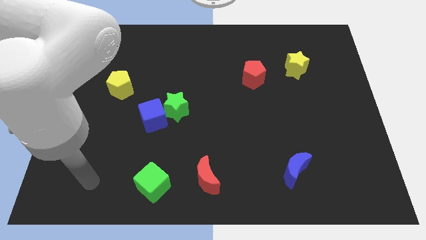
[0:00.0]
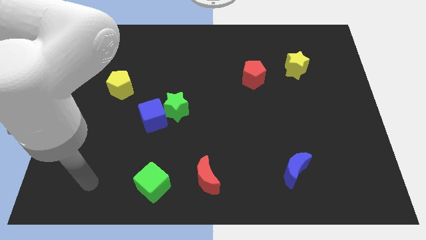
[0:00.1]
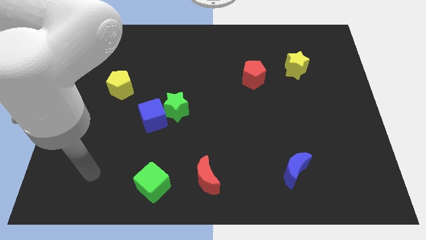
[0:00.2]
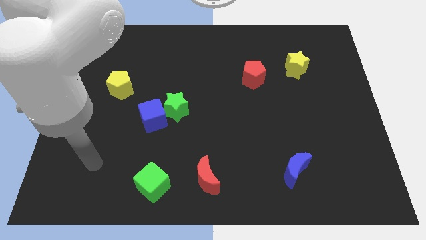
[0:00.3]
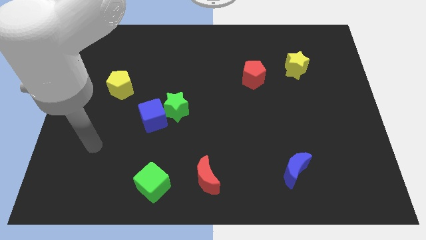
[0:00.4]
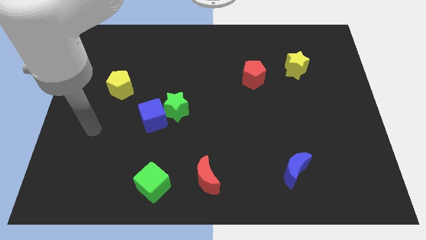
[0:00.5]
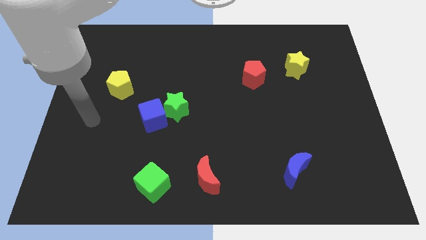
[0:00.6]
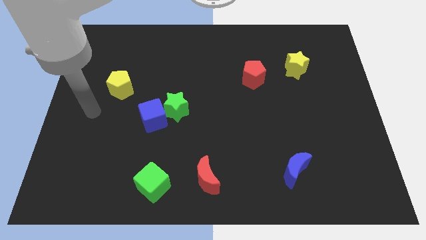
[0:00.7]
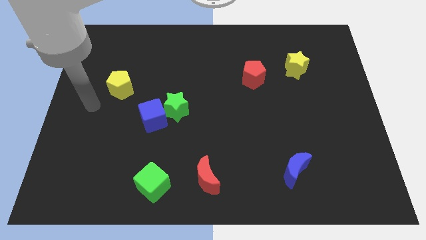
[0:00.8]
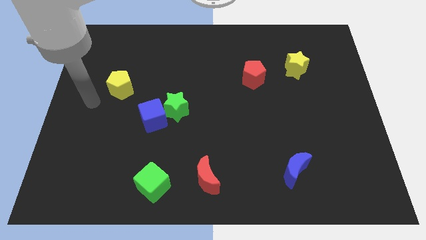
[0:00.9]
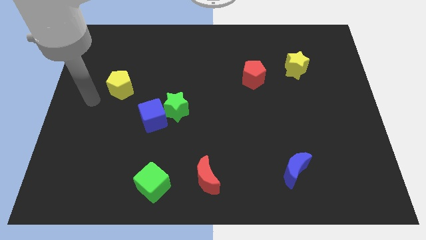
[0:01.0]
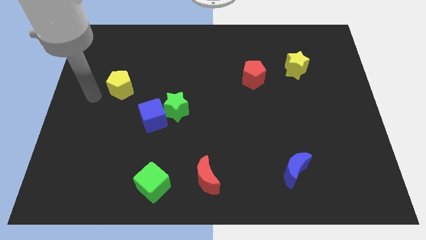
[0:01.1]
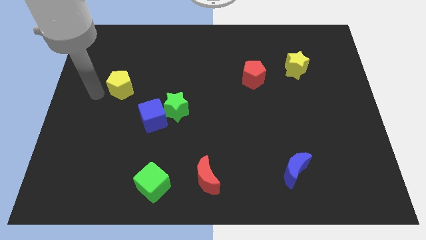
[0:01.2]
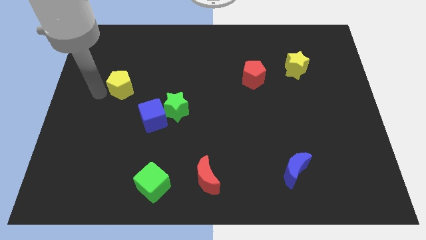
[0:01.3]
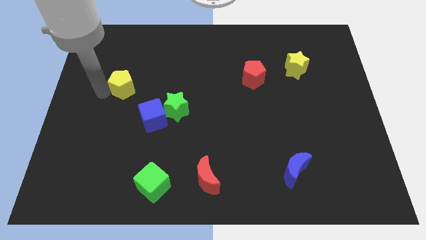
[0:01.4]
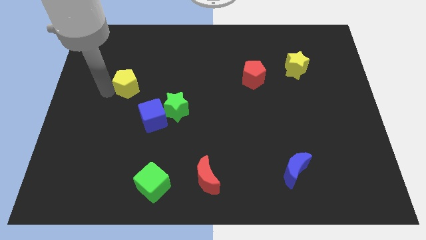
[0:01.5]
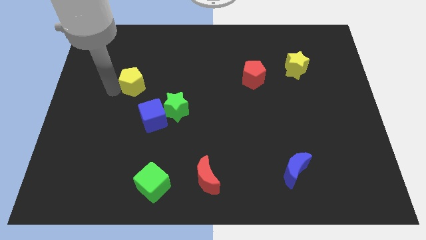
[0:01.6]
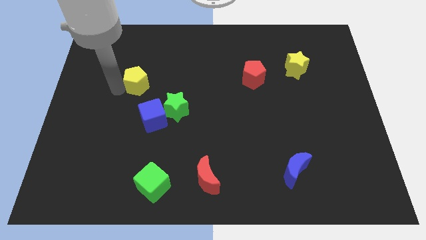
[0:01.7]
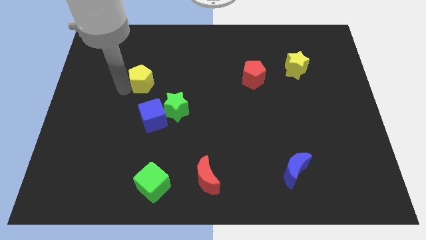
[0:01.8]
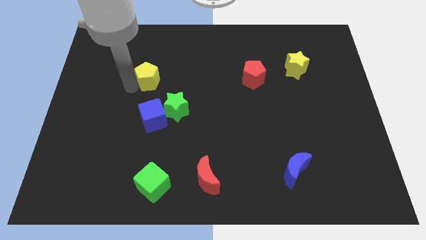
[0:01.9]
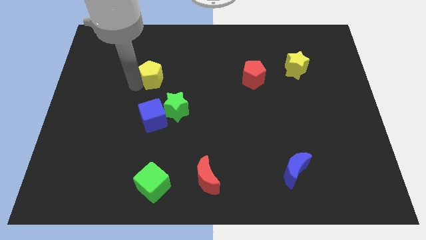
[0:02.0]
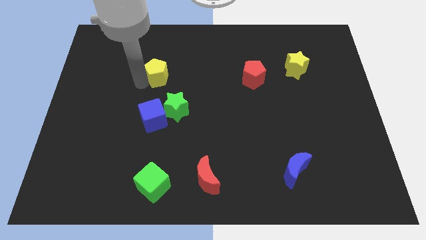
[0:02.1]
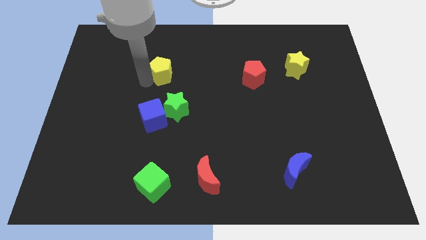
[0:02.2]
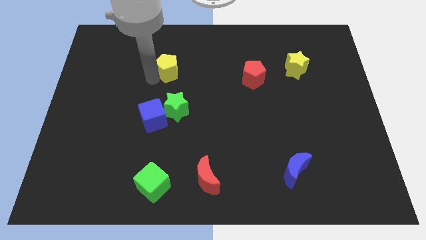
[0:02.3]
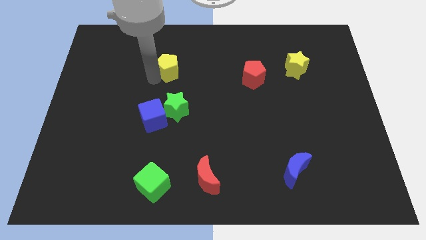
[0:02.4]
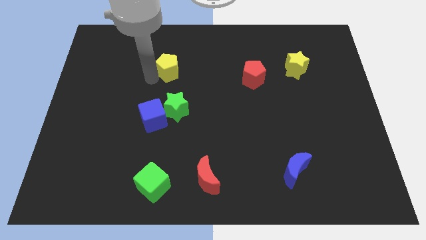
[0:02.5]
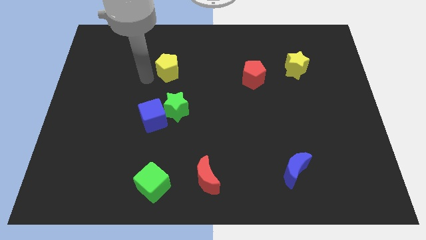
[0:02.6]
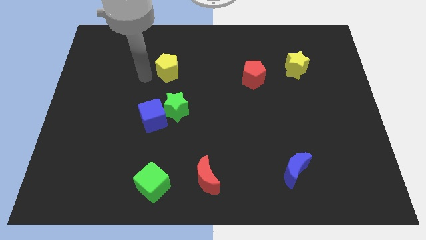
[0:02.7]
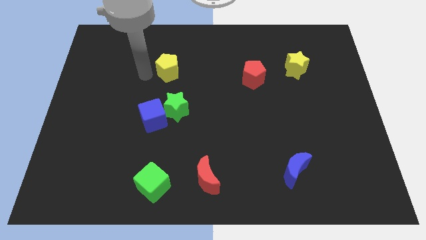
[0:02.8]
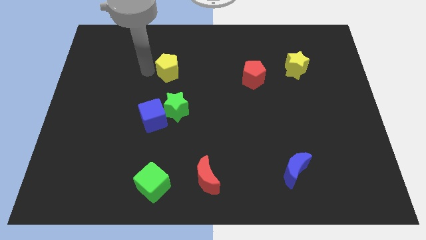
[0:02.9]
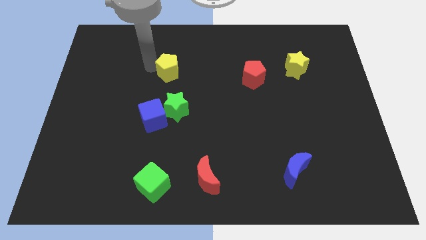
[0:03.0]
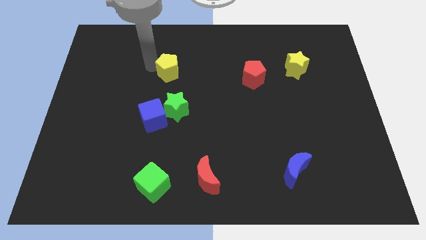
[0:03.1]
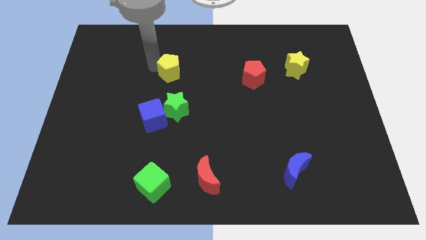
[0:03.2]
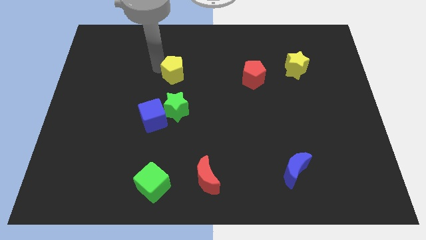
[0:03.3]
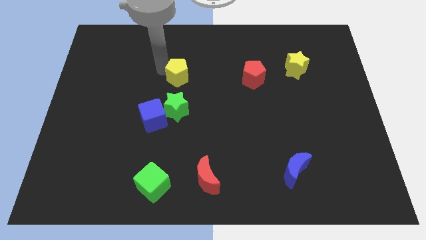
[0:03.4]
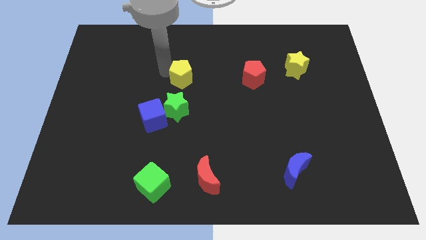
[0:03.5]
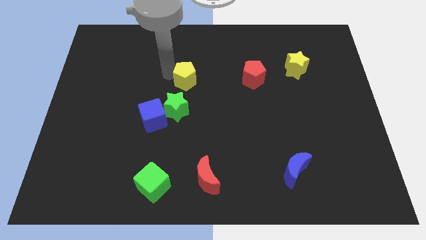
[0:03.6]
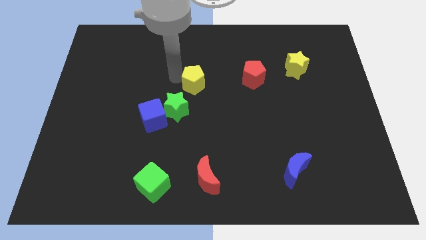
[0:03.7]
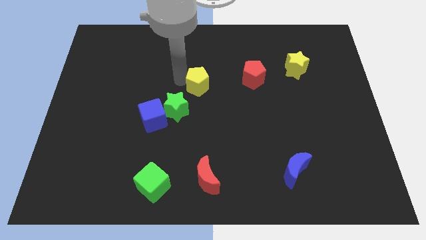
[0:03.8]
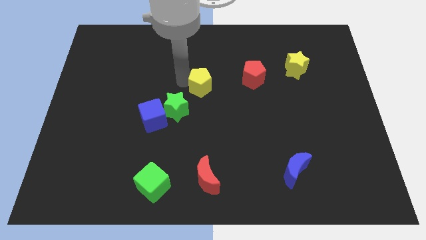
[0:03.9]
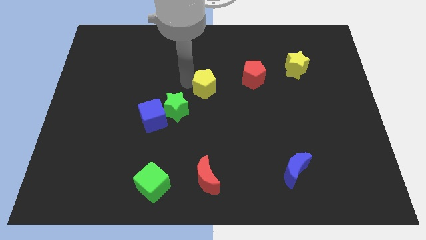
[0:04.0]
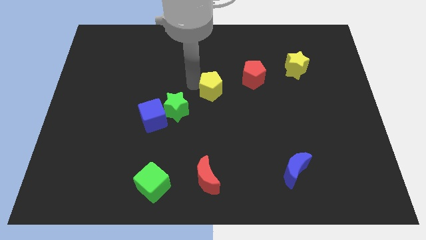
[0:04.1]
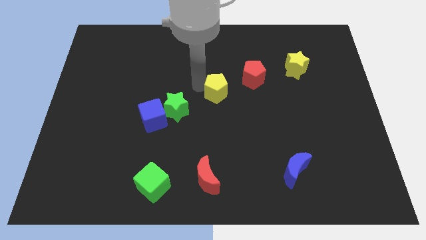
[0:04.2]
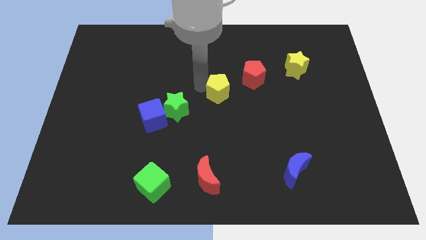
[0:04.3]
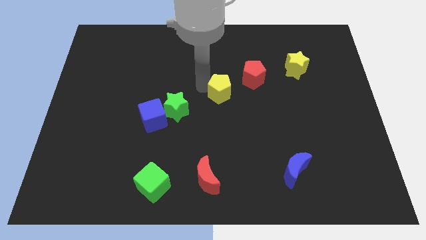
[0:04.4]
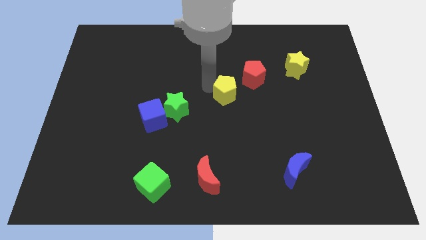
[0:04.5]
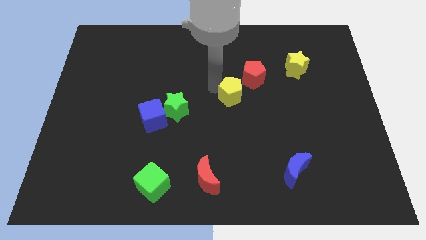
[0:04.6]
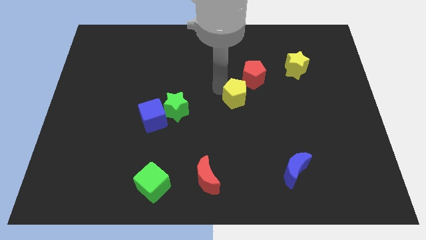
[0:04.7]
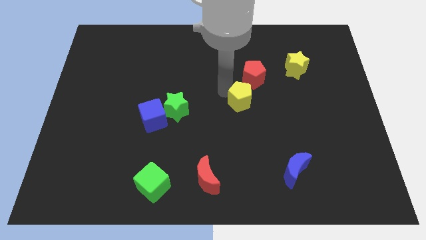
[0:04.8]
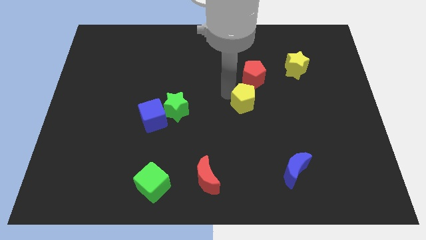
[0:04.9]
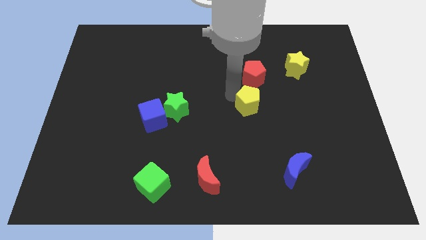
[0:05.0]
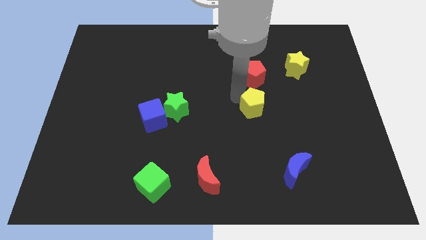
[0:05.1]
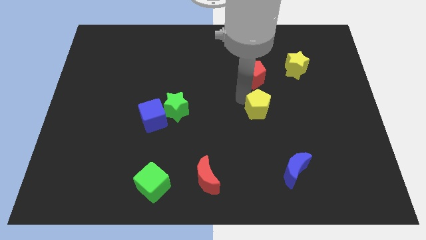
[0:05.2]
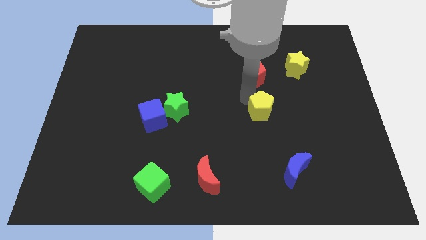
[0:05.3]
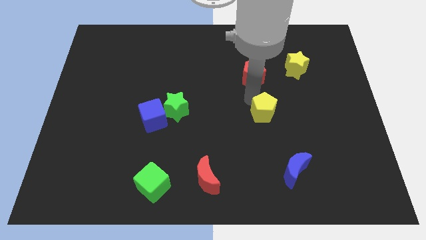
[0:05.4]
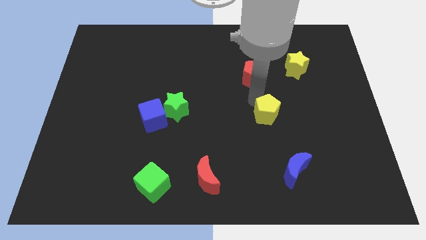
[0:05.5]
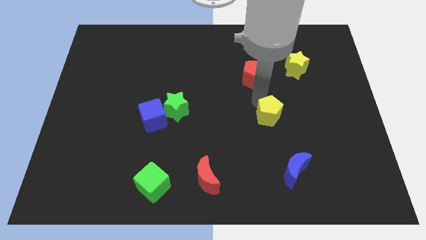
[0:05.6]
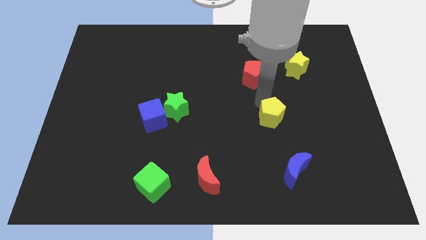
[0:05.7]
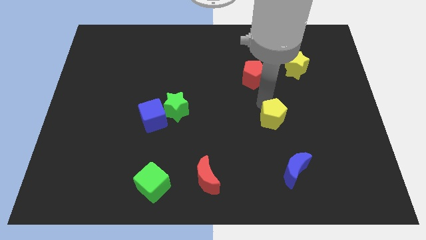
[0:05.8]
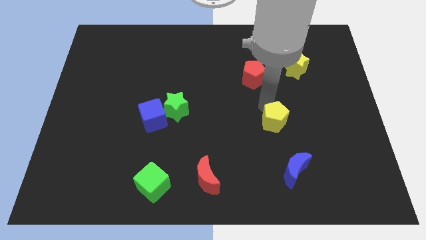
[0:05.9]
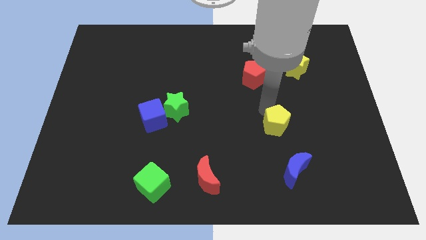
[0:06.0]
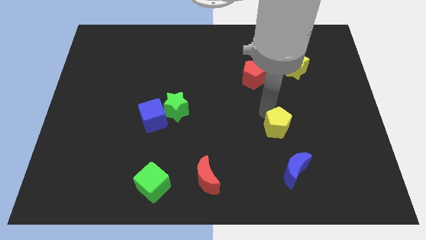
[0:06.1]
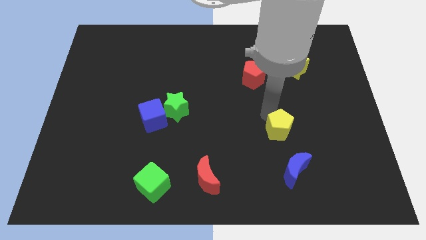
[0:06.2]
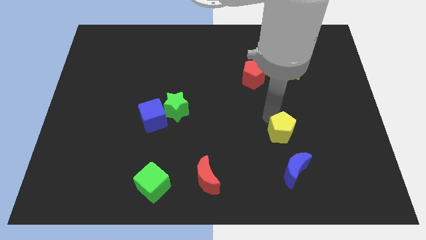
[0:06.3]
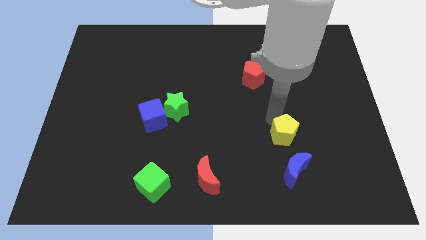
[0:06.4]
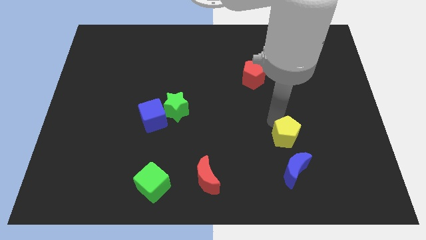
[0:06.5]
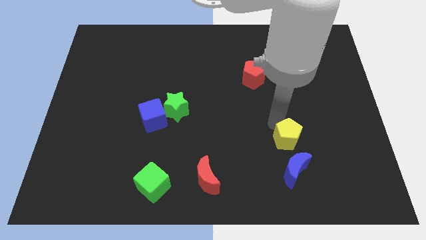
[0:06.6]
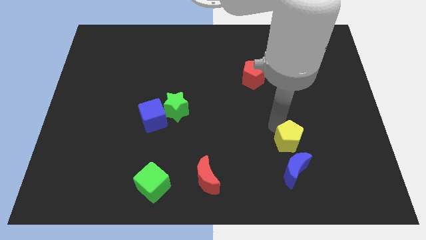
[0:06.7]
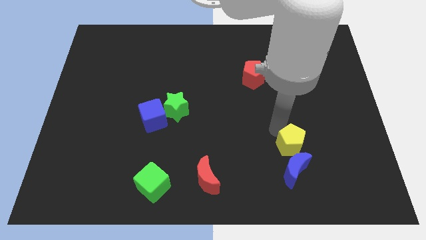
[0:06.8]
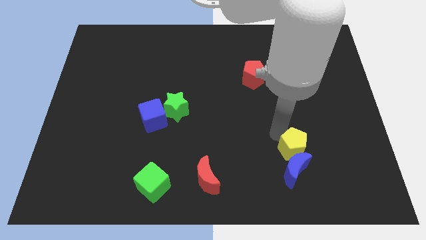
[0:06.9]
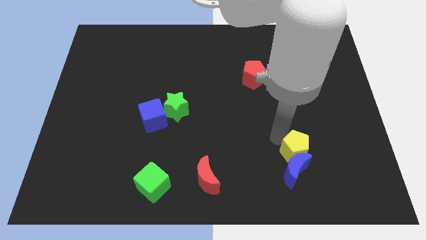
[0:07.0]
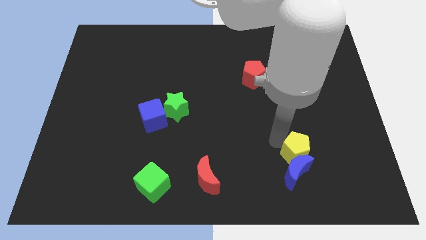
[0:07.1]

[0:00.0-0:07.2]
slide the yellow pentagon next to the blue moon

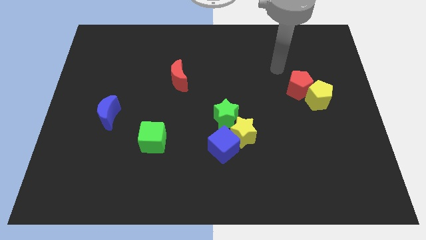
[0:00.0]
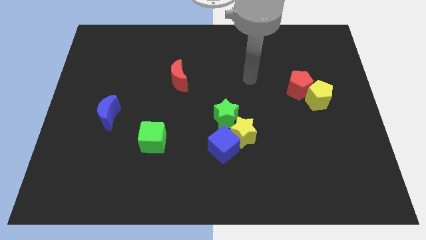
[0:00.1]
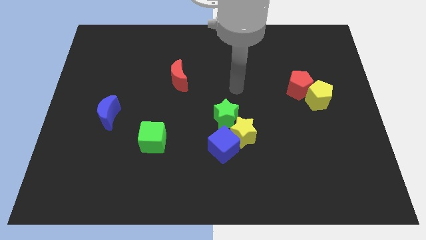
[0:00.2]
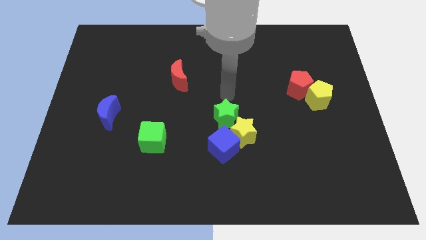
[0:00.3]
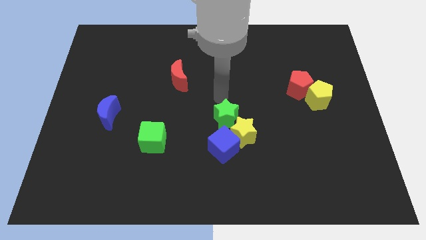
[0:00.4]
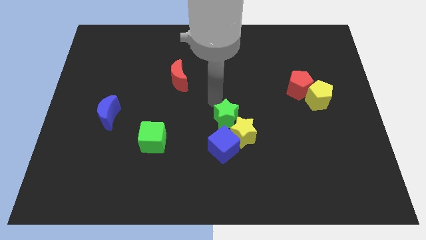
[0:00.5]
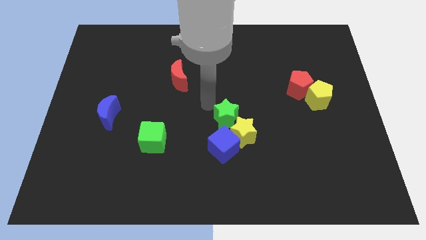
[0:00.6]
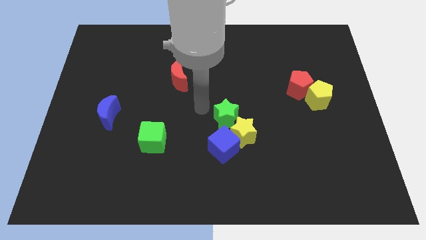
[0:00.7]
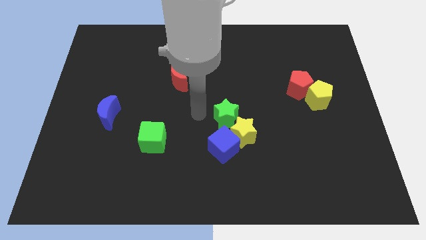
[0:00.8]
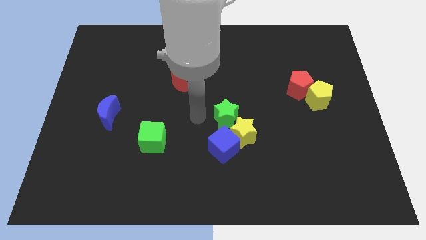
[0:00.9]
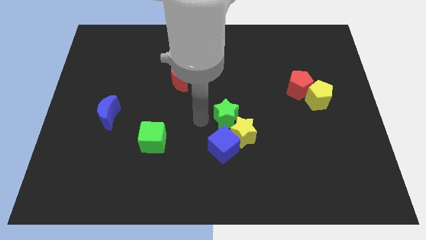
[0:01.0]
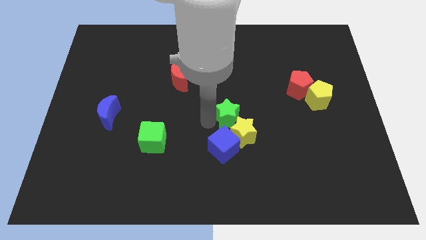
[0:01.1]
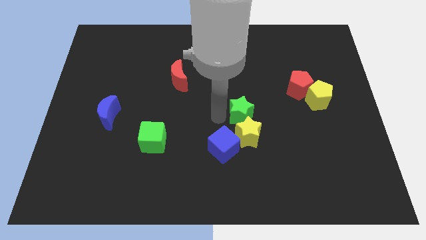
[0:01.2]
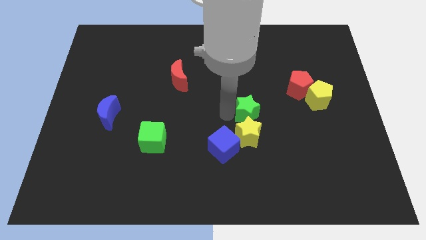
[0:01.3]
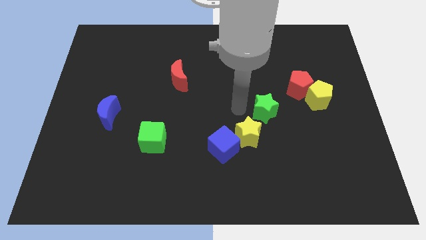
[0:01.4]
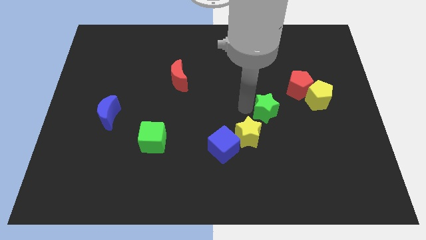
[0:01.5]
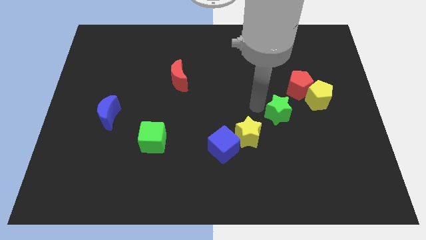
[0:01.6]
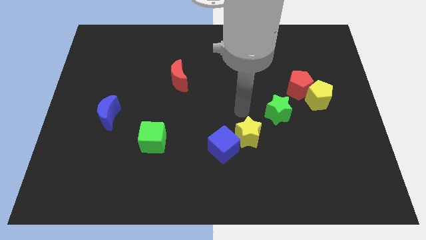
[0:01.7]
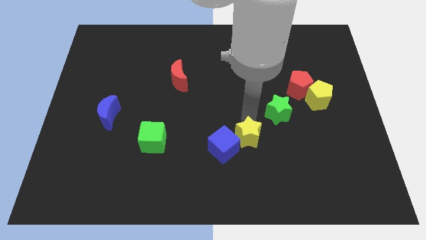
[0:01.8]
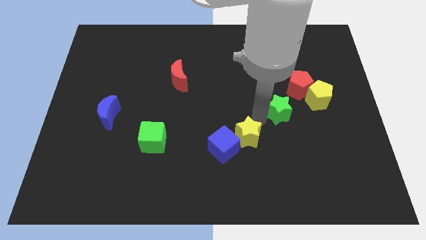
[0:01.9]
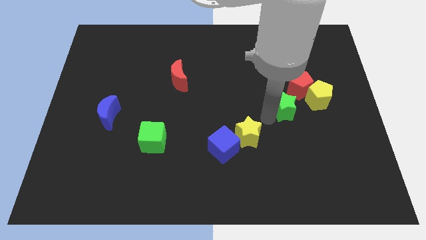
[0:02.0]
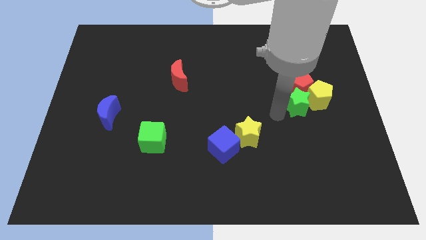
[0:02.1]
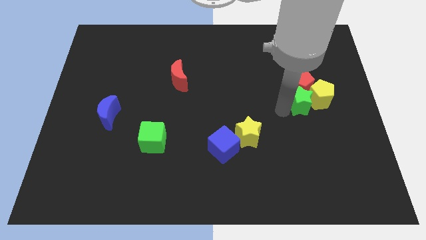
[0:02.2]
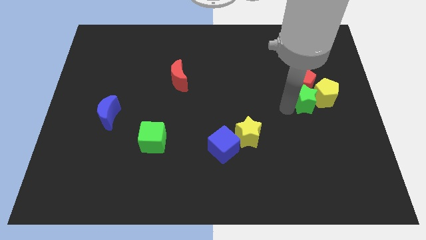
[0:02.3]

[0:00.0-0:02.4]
slide the green star close to the yellow pentagon
